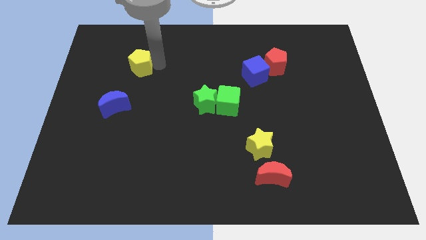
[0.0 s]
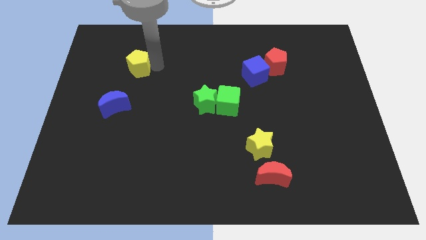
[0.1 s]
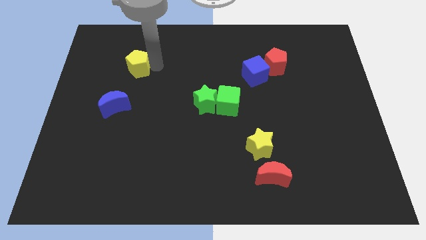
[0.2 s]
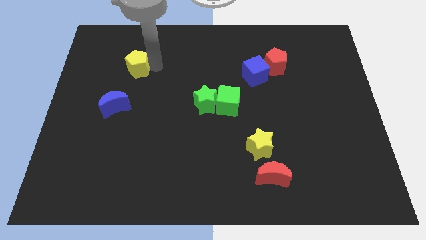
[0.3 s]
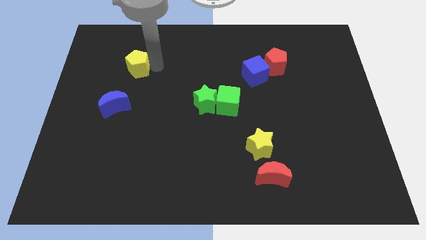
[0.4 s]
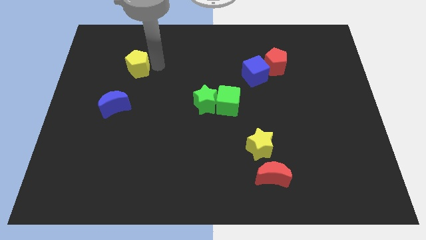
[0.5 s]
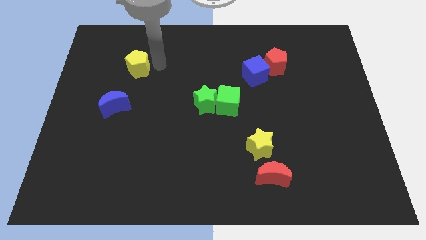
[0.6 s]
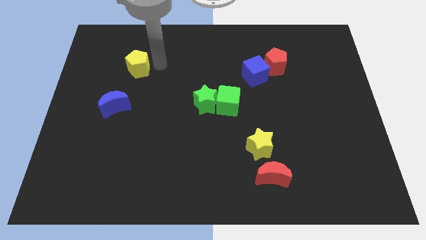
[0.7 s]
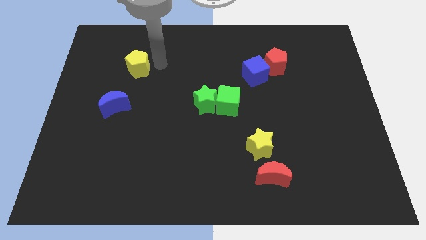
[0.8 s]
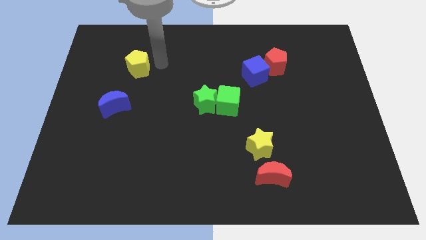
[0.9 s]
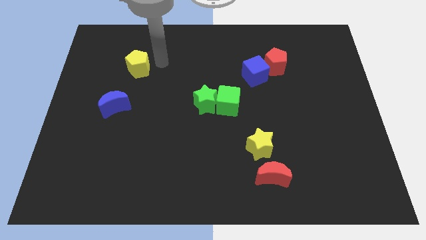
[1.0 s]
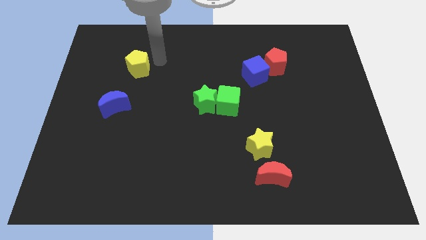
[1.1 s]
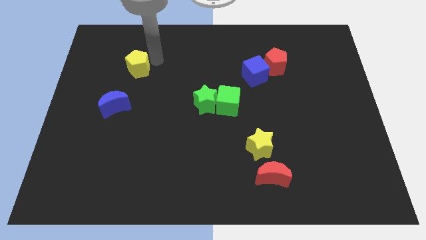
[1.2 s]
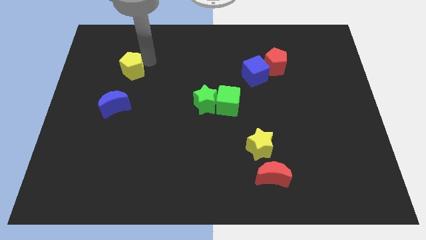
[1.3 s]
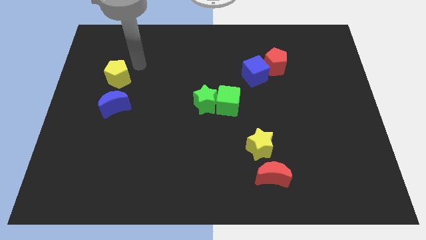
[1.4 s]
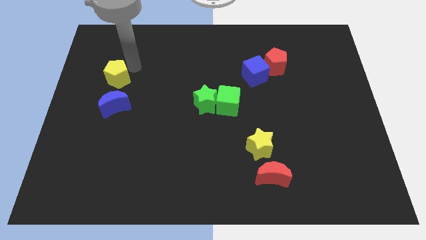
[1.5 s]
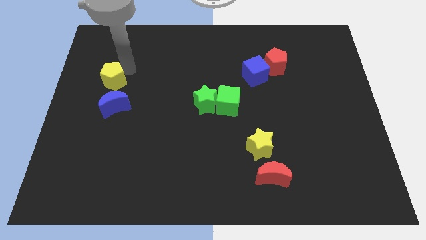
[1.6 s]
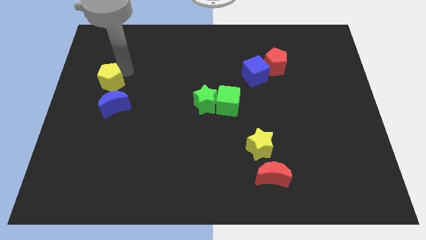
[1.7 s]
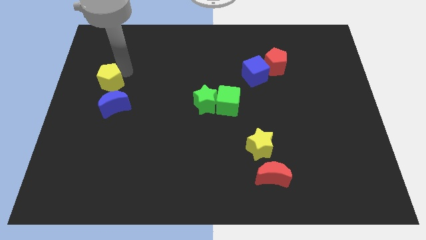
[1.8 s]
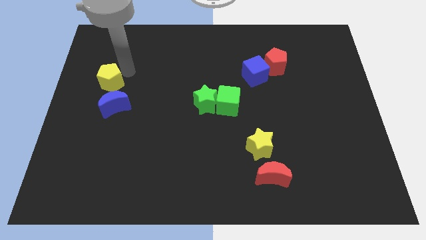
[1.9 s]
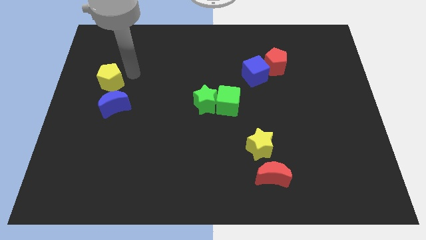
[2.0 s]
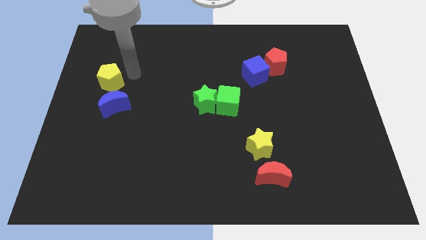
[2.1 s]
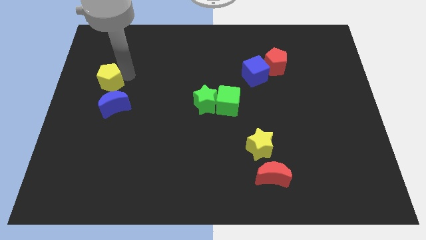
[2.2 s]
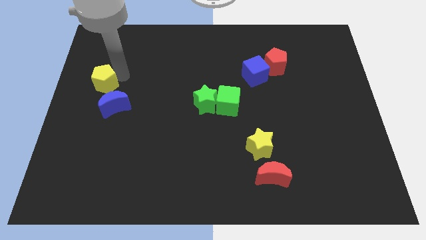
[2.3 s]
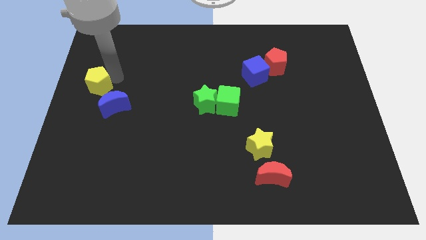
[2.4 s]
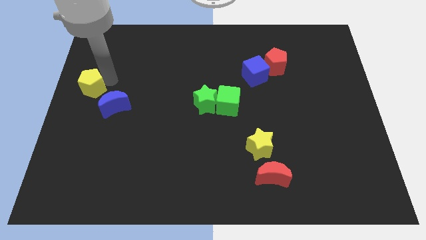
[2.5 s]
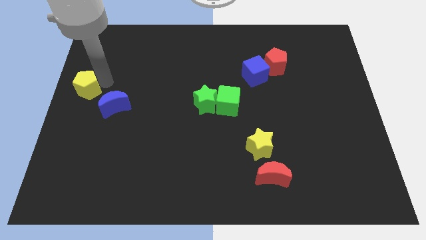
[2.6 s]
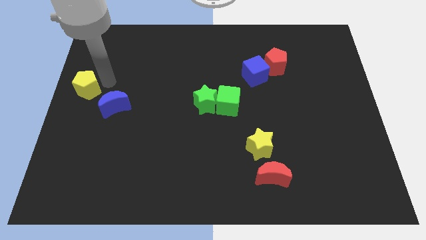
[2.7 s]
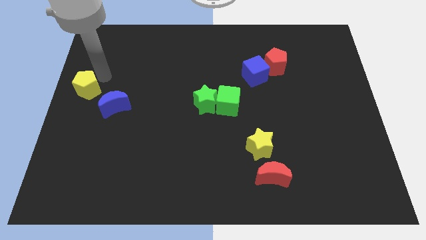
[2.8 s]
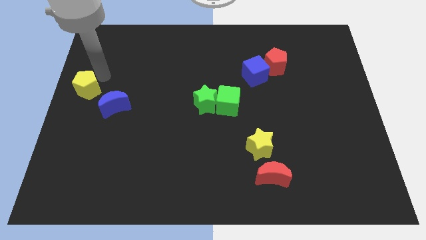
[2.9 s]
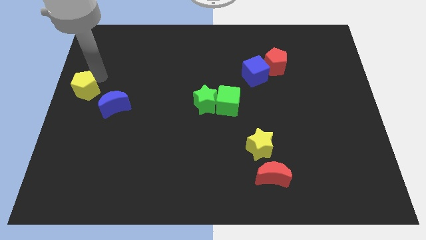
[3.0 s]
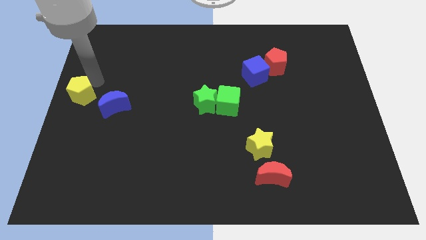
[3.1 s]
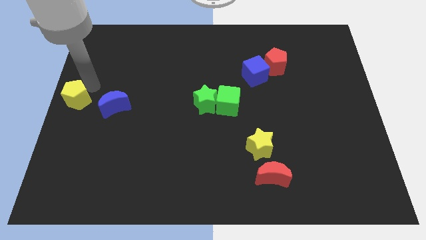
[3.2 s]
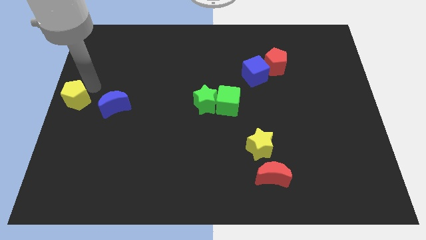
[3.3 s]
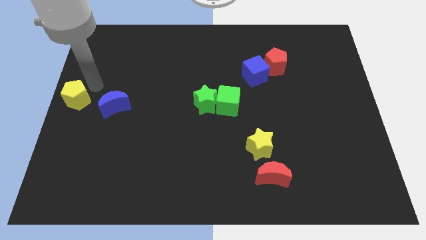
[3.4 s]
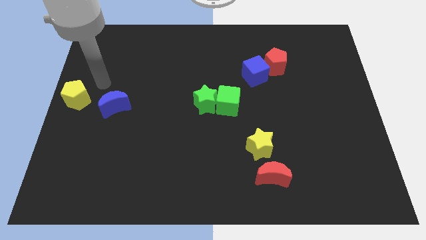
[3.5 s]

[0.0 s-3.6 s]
place the yellow pentagon towards the top left side of the blue crescent

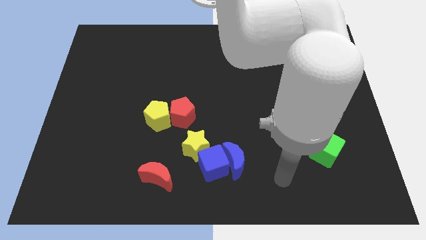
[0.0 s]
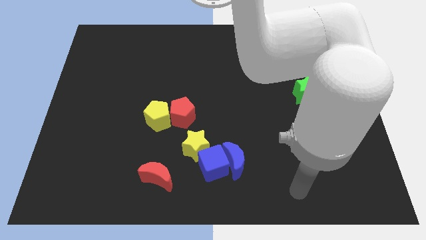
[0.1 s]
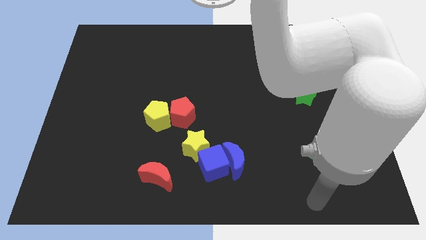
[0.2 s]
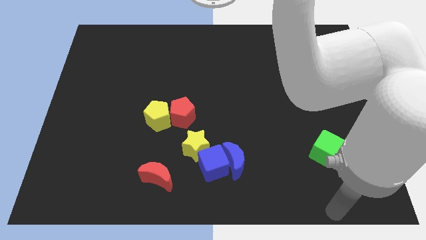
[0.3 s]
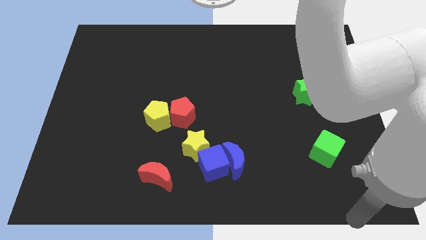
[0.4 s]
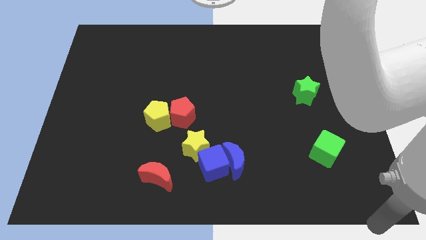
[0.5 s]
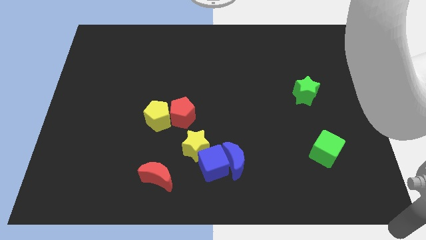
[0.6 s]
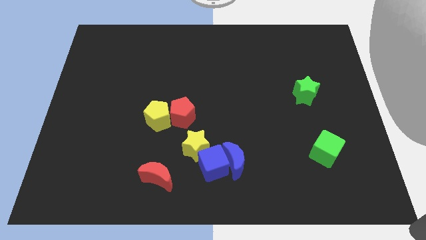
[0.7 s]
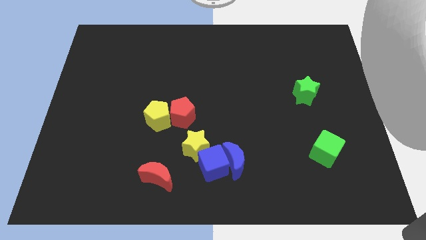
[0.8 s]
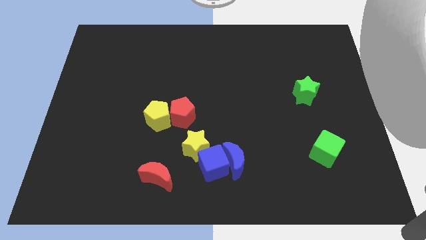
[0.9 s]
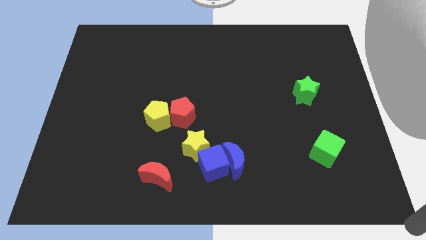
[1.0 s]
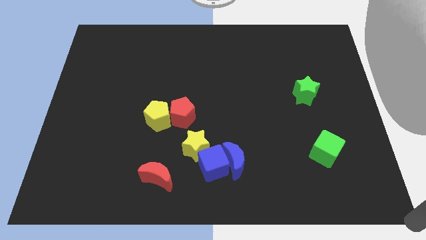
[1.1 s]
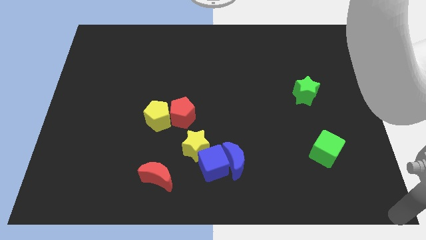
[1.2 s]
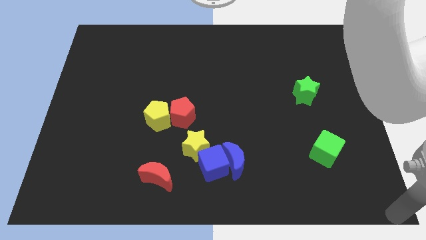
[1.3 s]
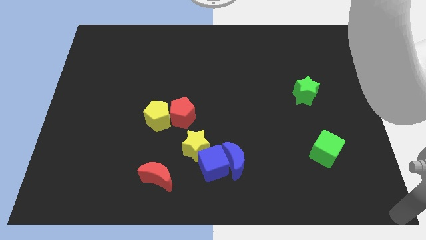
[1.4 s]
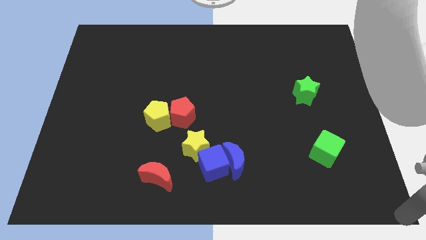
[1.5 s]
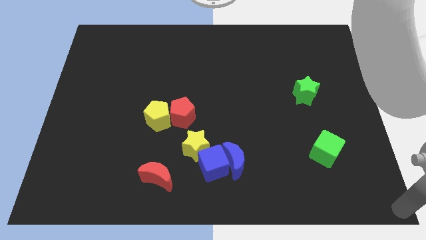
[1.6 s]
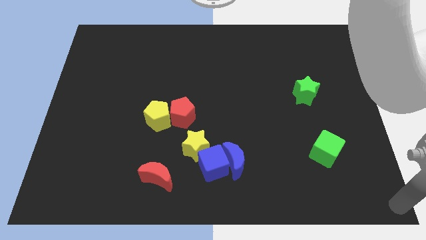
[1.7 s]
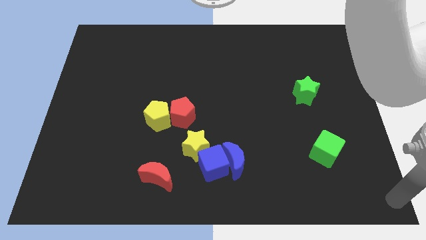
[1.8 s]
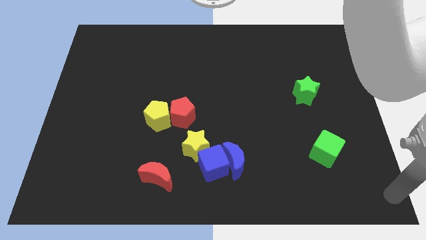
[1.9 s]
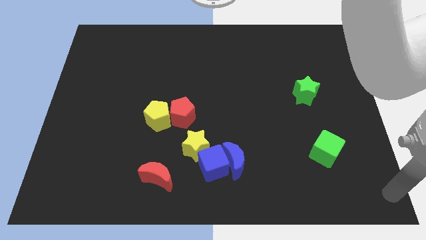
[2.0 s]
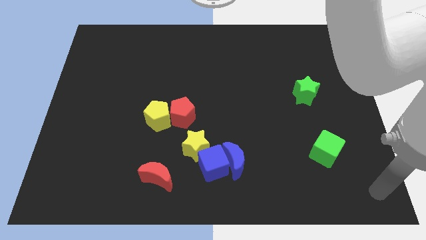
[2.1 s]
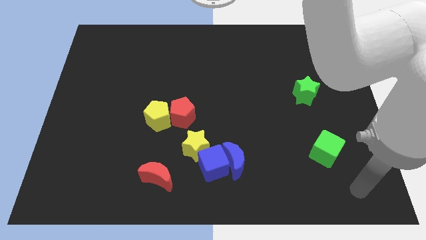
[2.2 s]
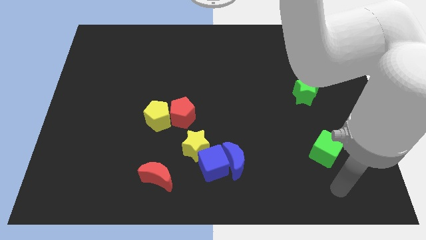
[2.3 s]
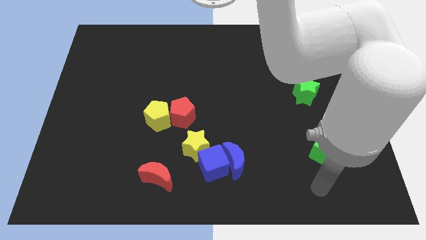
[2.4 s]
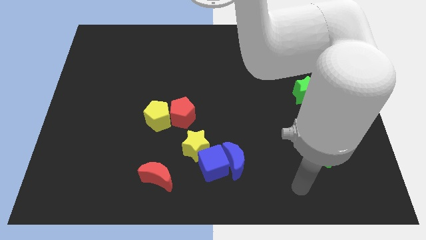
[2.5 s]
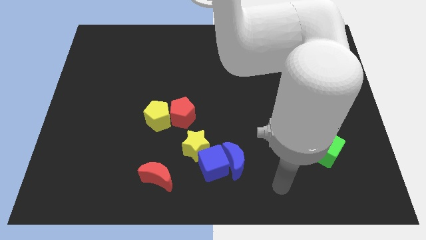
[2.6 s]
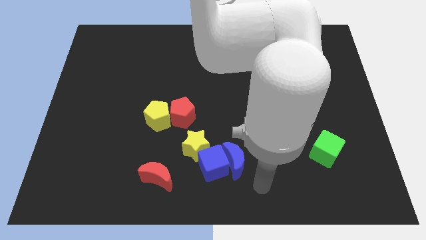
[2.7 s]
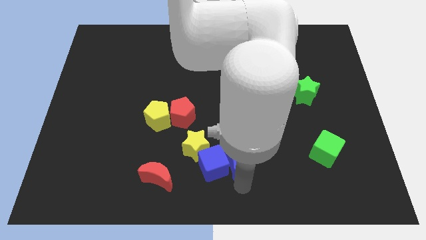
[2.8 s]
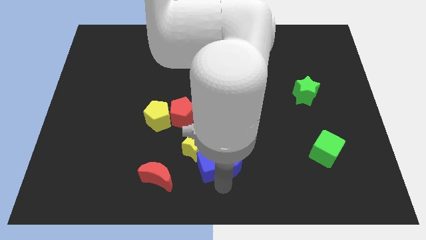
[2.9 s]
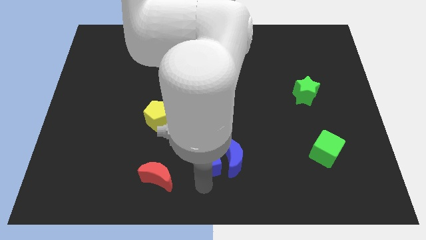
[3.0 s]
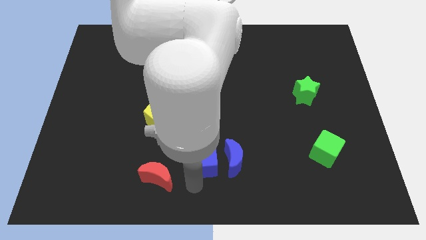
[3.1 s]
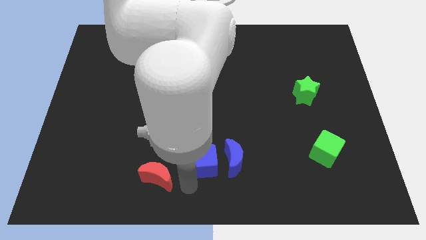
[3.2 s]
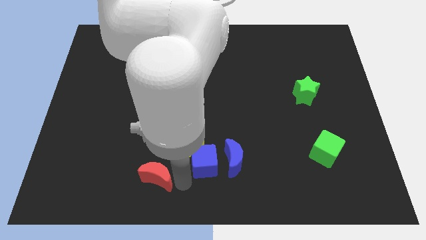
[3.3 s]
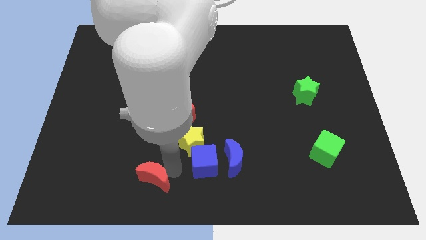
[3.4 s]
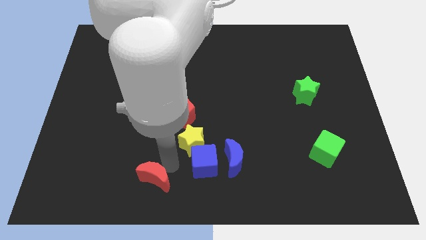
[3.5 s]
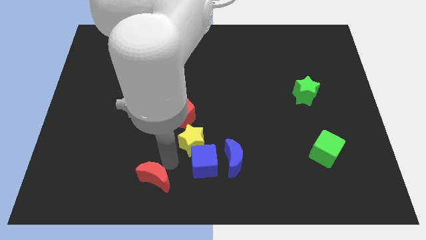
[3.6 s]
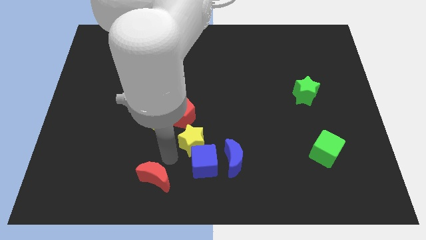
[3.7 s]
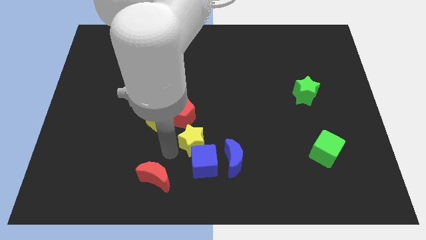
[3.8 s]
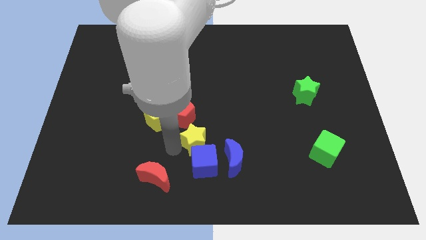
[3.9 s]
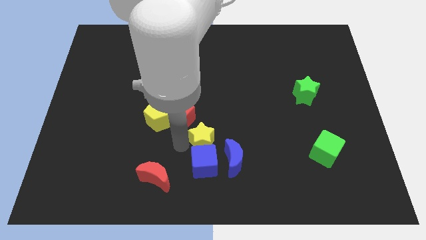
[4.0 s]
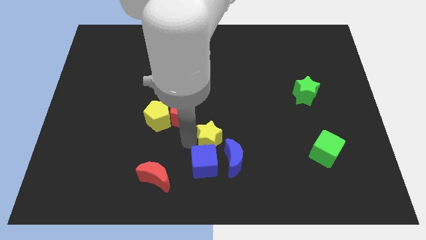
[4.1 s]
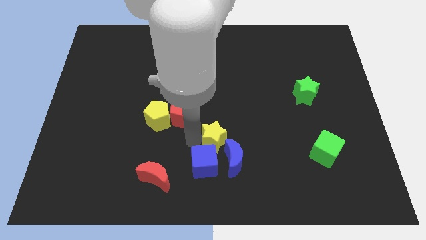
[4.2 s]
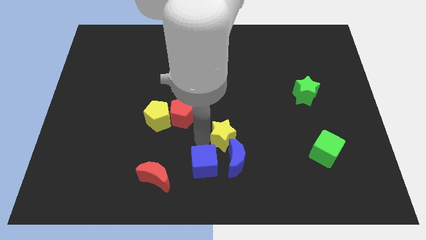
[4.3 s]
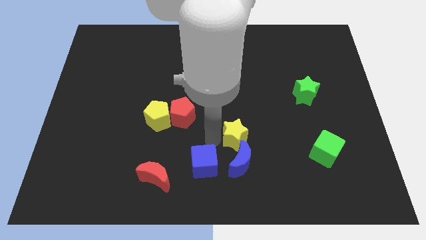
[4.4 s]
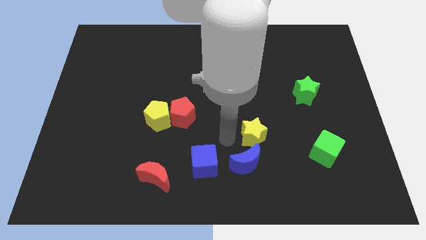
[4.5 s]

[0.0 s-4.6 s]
push the yellow star towards the center right

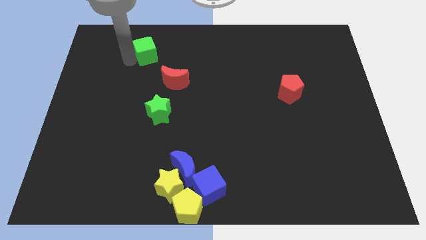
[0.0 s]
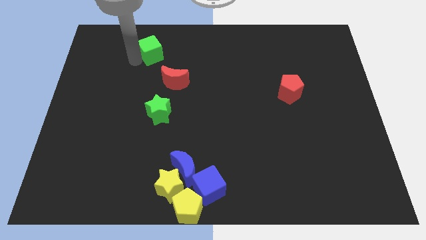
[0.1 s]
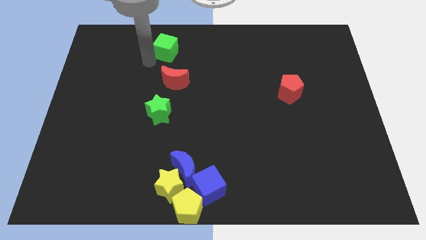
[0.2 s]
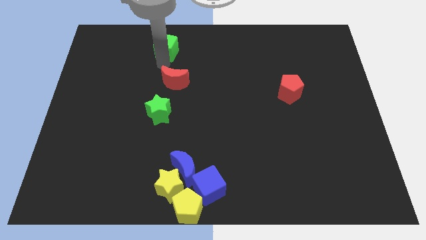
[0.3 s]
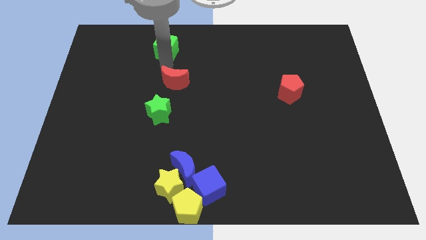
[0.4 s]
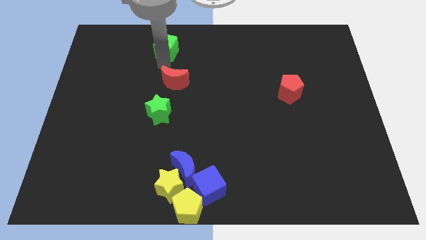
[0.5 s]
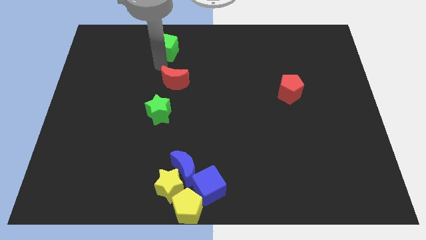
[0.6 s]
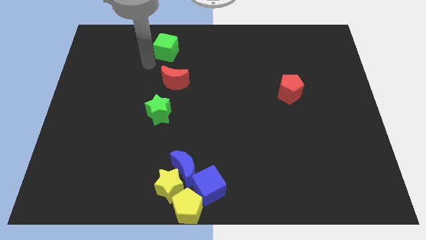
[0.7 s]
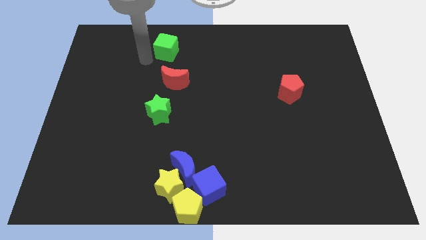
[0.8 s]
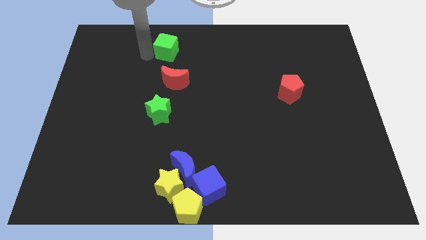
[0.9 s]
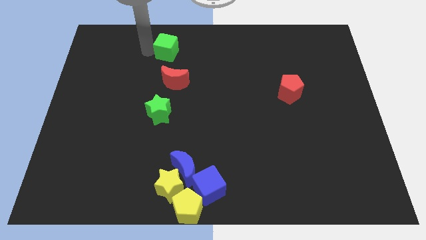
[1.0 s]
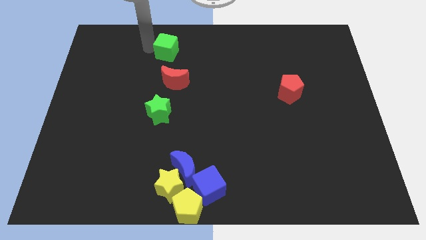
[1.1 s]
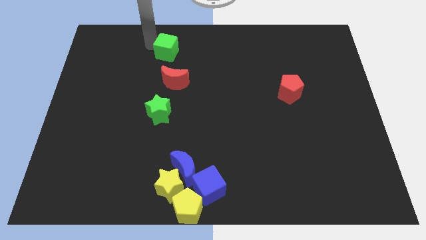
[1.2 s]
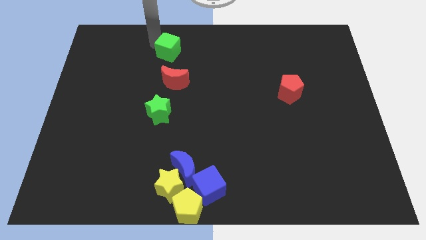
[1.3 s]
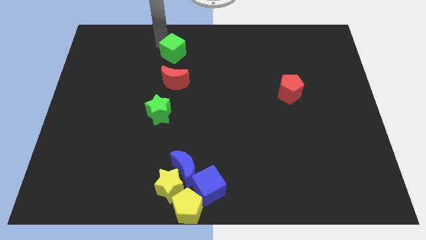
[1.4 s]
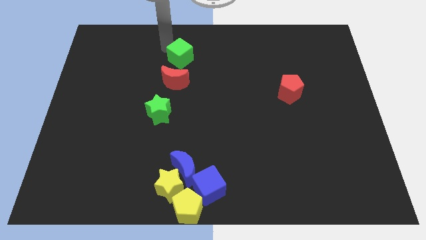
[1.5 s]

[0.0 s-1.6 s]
push the green cube vertically above the red crescent
